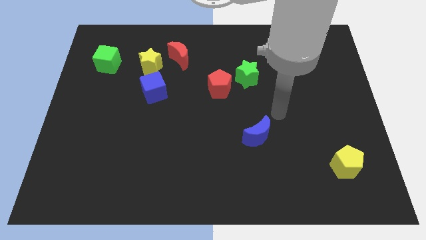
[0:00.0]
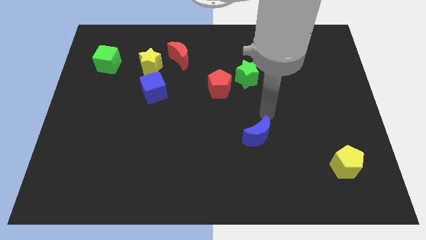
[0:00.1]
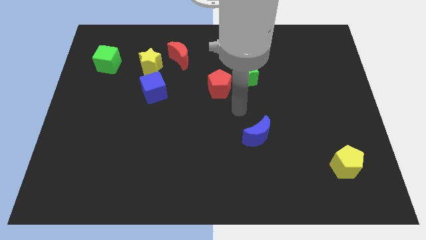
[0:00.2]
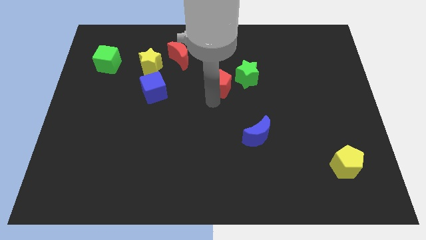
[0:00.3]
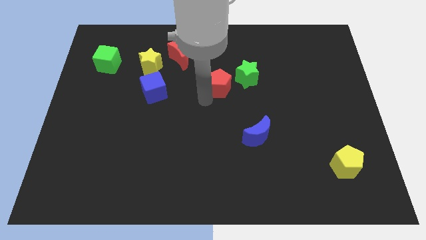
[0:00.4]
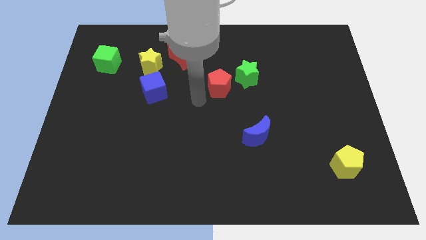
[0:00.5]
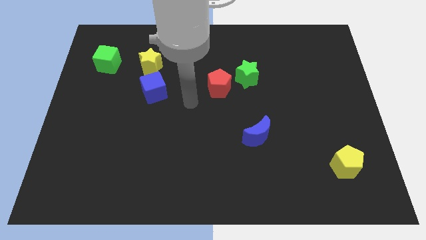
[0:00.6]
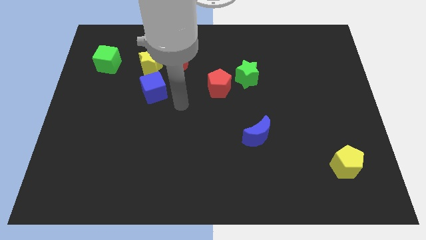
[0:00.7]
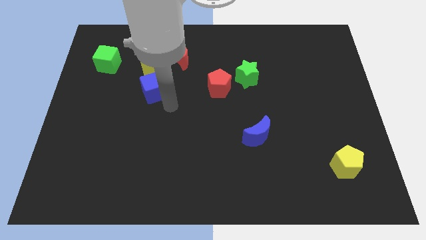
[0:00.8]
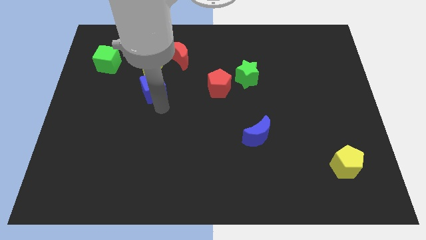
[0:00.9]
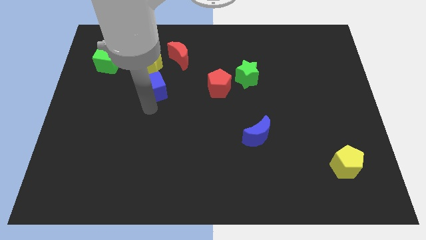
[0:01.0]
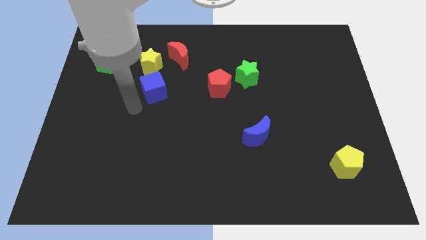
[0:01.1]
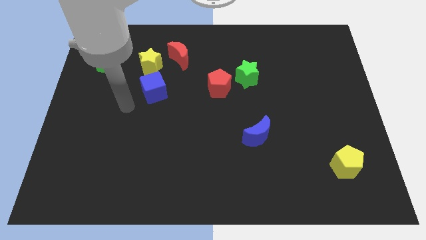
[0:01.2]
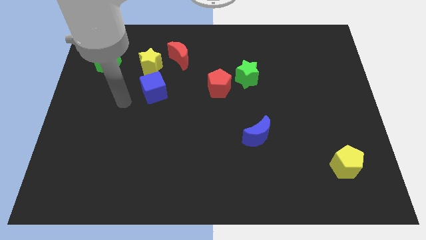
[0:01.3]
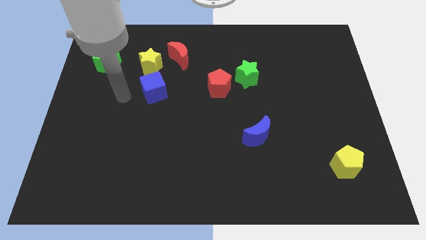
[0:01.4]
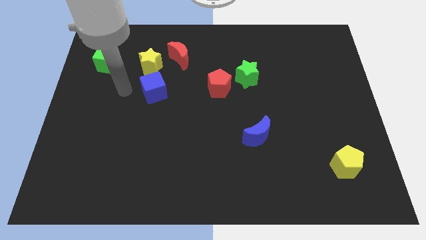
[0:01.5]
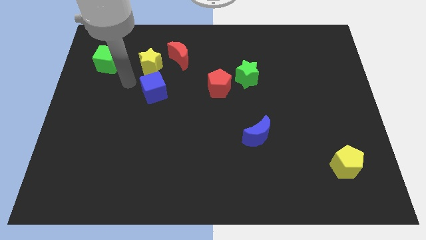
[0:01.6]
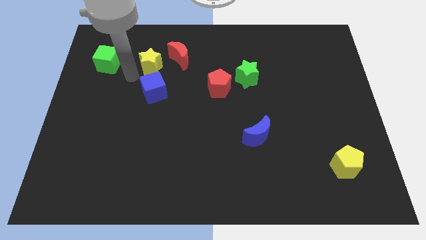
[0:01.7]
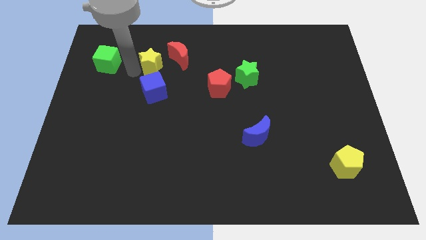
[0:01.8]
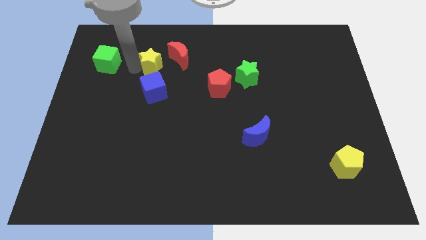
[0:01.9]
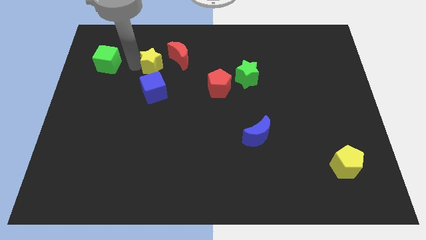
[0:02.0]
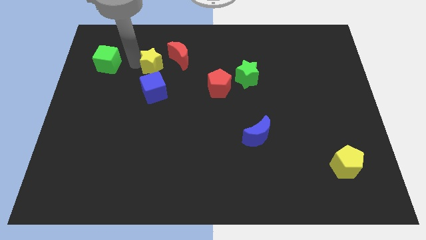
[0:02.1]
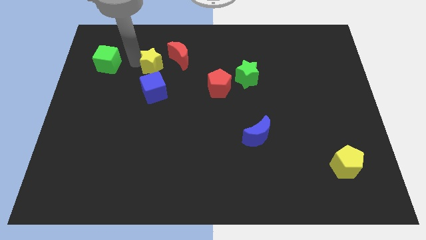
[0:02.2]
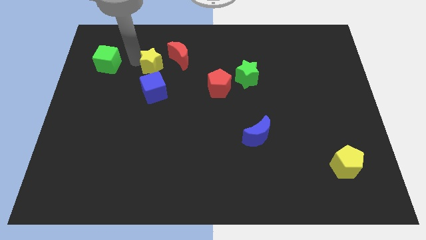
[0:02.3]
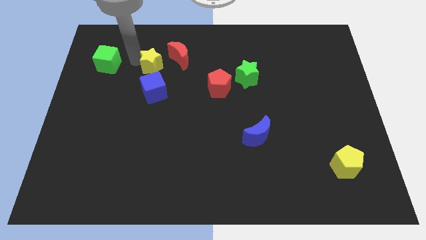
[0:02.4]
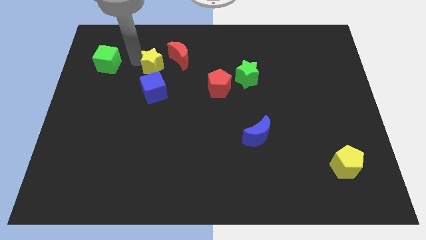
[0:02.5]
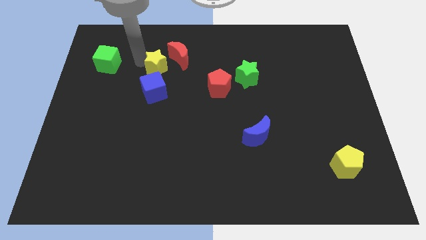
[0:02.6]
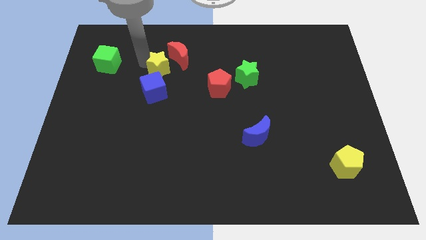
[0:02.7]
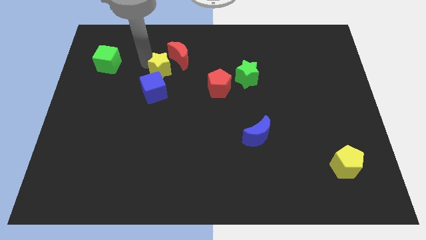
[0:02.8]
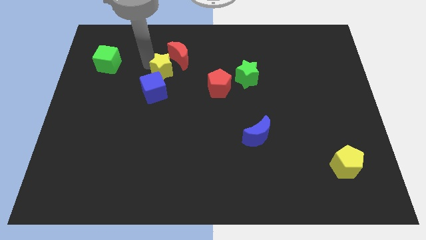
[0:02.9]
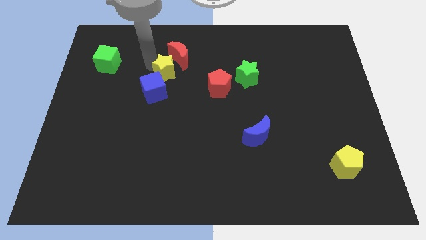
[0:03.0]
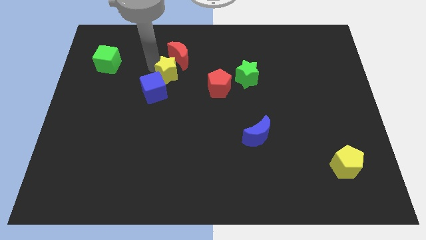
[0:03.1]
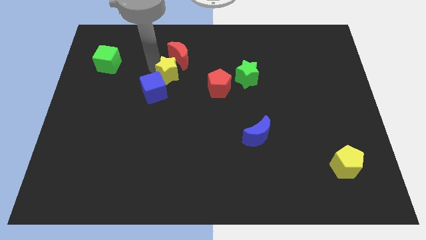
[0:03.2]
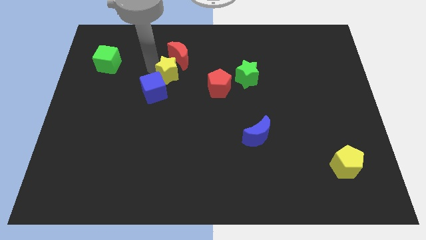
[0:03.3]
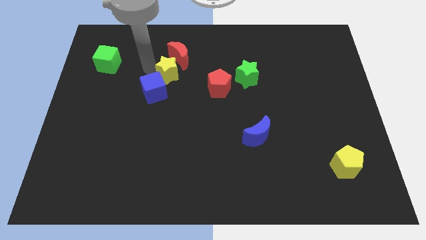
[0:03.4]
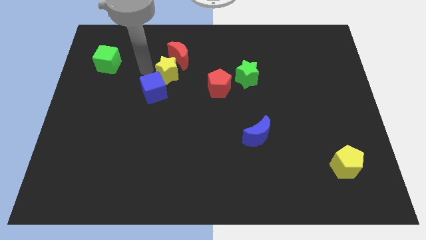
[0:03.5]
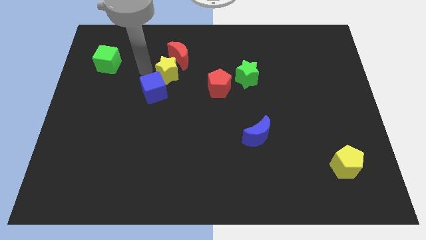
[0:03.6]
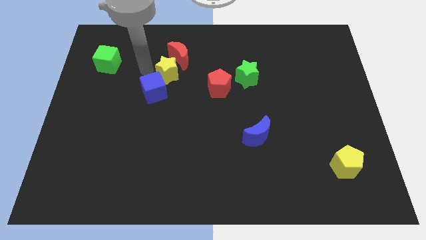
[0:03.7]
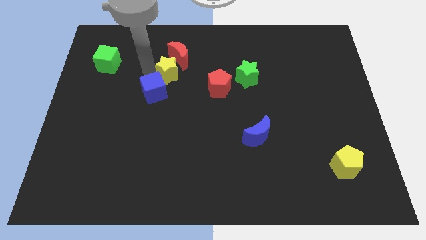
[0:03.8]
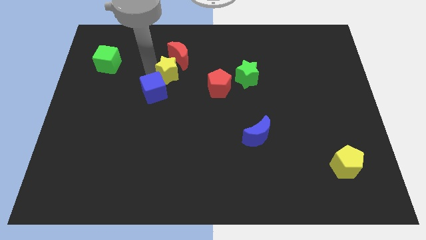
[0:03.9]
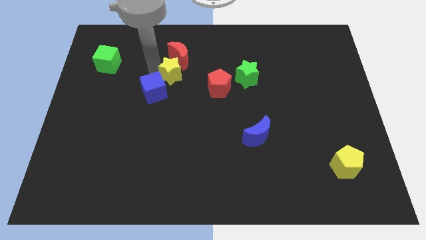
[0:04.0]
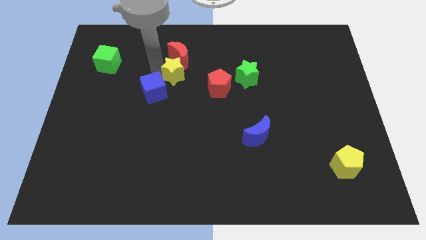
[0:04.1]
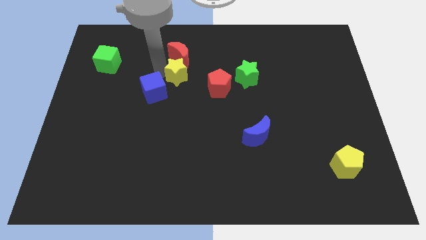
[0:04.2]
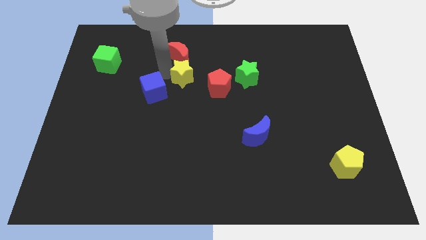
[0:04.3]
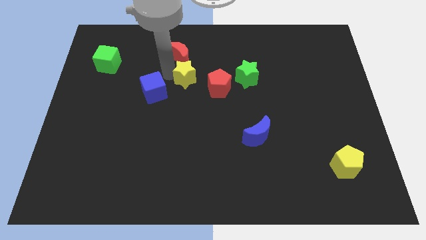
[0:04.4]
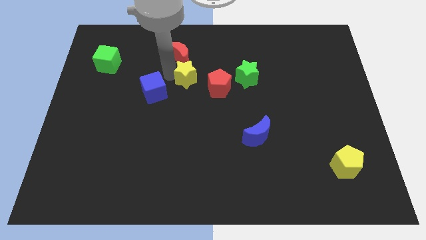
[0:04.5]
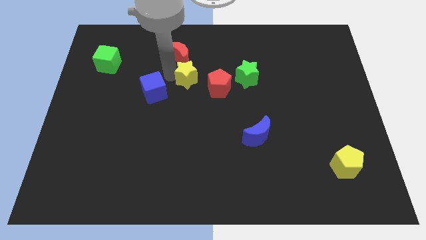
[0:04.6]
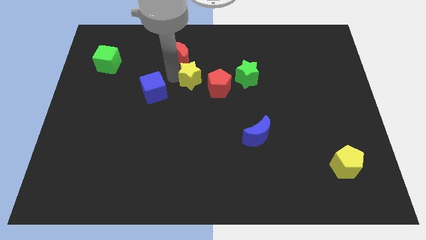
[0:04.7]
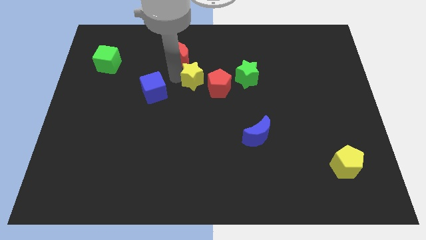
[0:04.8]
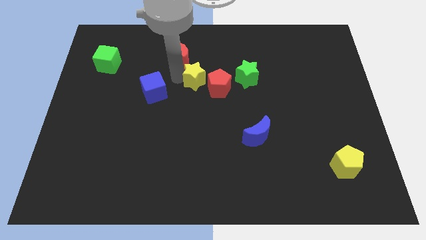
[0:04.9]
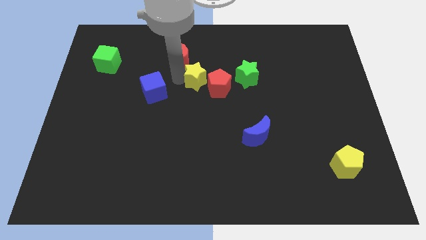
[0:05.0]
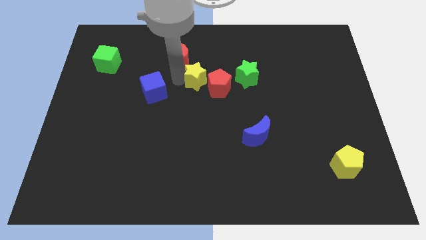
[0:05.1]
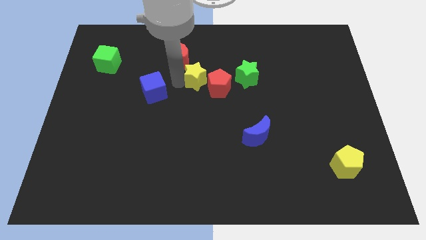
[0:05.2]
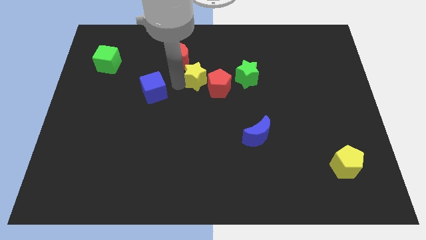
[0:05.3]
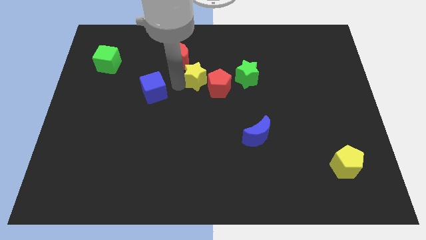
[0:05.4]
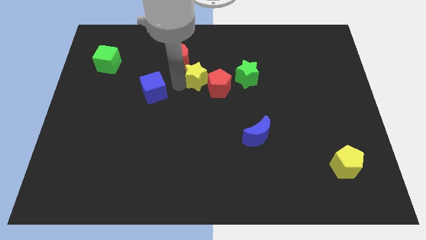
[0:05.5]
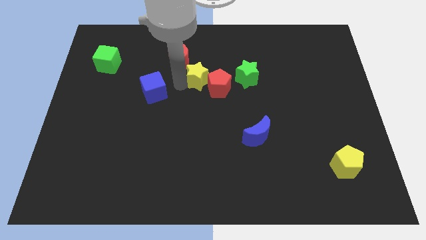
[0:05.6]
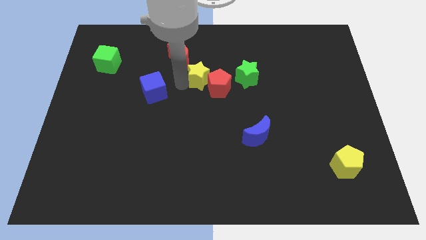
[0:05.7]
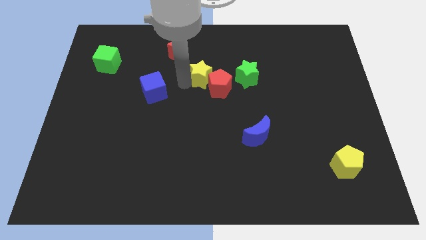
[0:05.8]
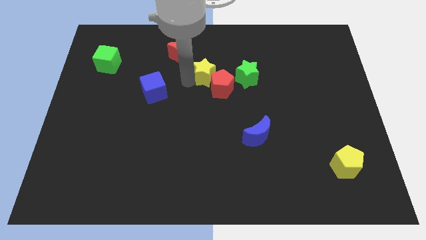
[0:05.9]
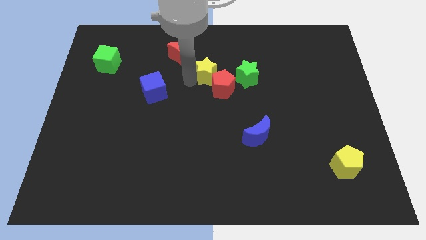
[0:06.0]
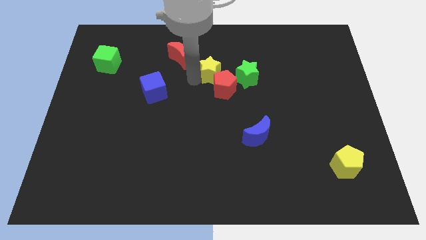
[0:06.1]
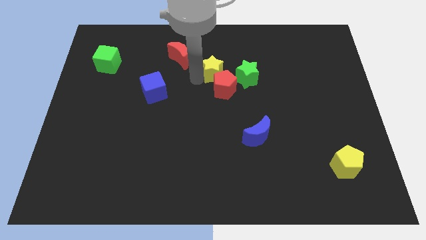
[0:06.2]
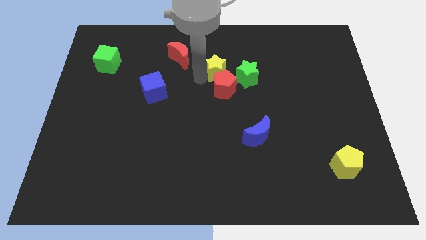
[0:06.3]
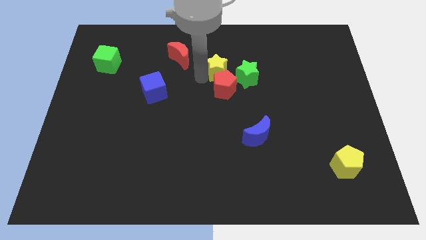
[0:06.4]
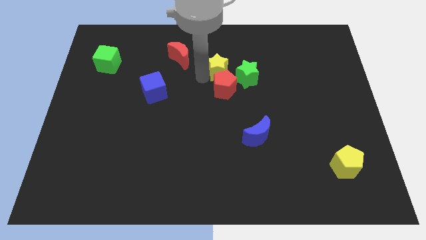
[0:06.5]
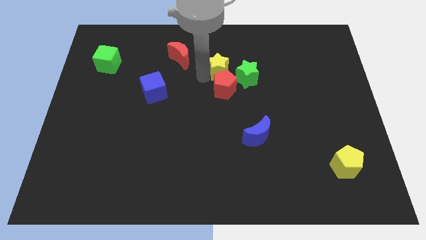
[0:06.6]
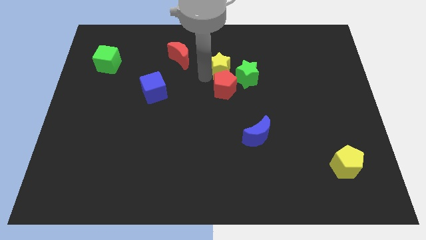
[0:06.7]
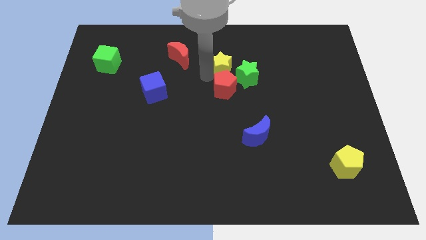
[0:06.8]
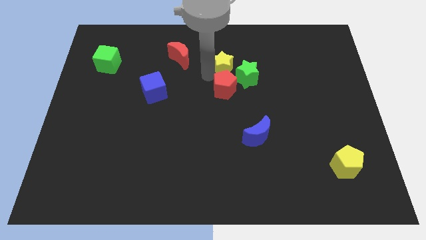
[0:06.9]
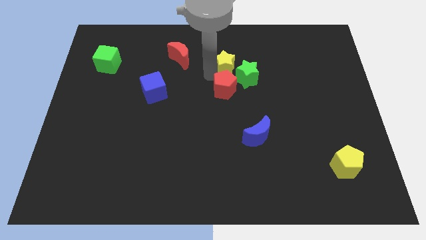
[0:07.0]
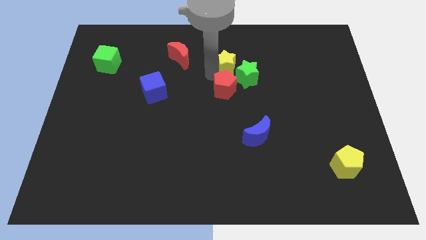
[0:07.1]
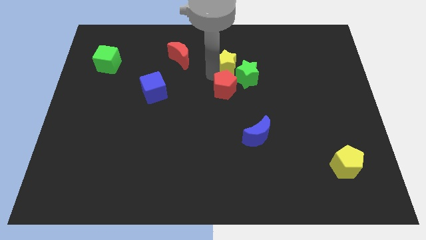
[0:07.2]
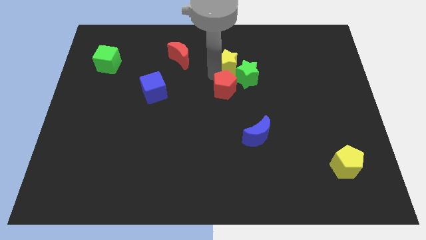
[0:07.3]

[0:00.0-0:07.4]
push the yellow star to the green star

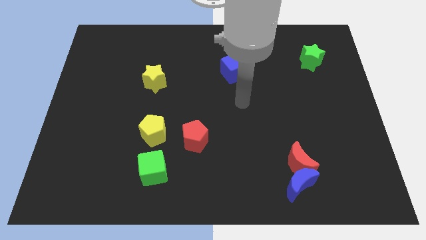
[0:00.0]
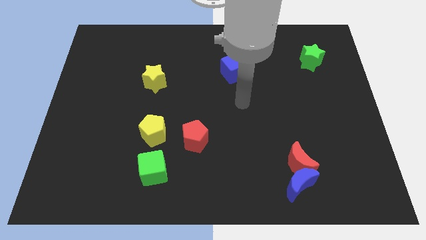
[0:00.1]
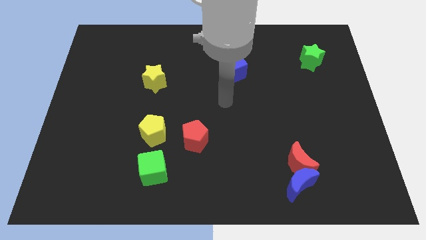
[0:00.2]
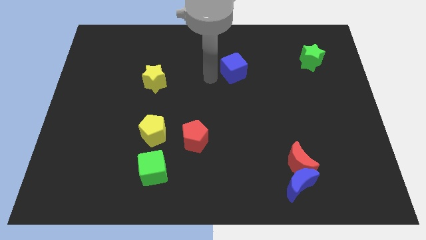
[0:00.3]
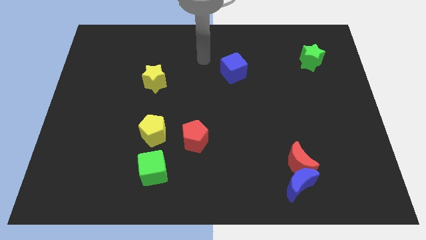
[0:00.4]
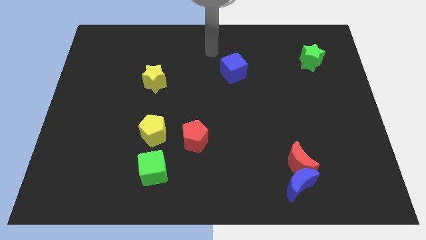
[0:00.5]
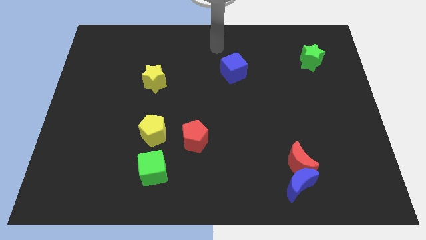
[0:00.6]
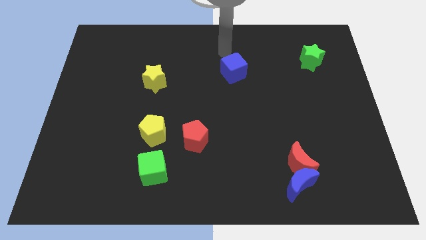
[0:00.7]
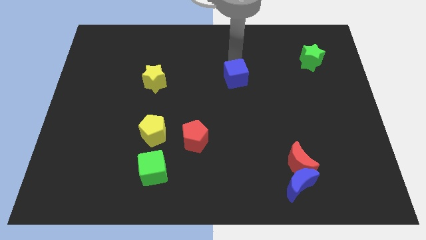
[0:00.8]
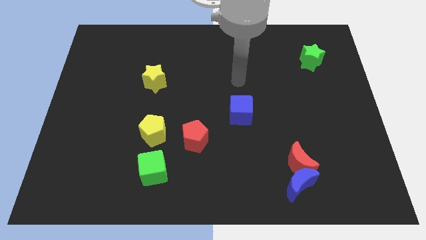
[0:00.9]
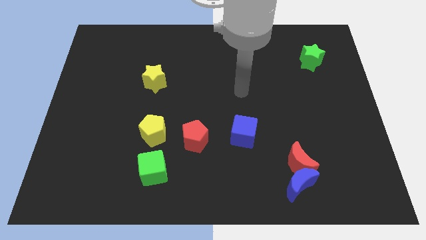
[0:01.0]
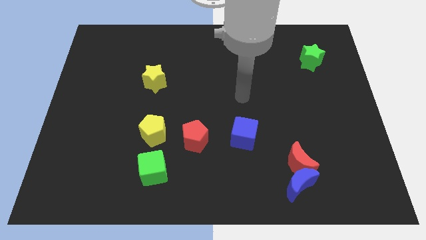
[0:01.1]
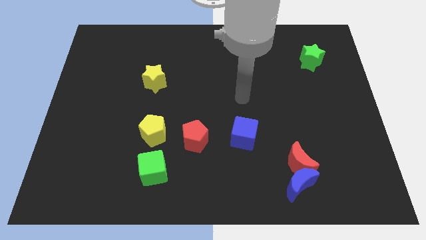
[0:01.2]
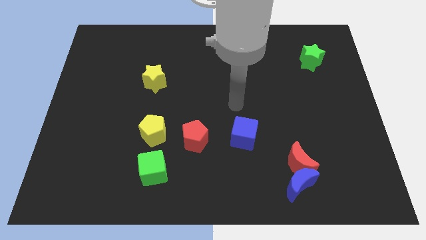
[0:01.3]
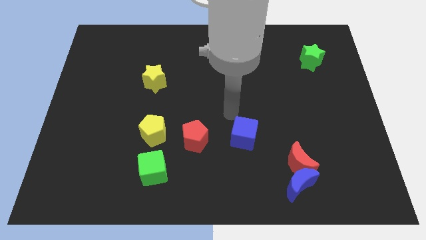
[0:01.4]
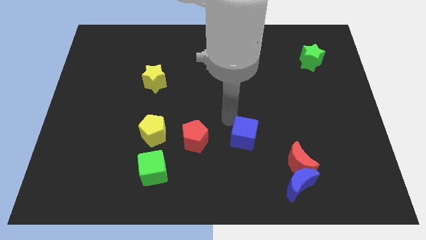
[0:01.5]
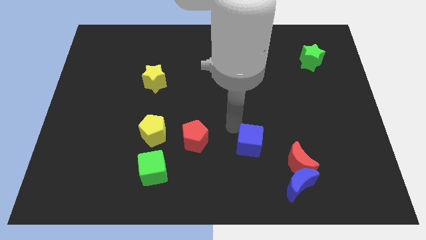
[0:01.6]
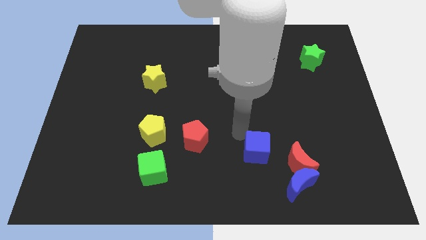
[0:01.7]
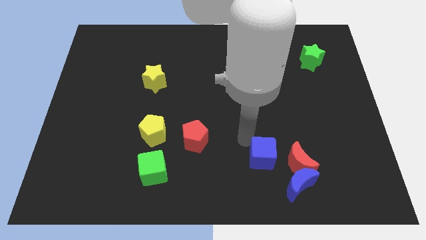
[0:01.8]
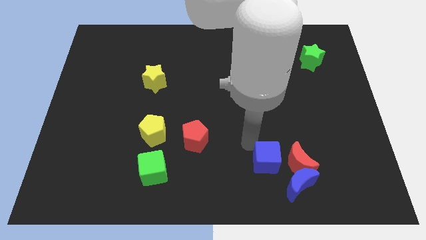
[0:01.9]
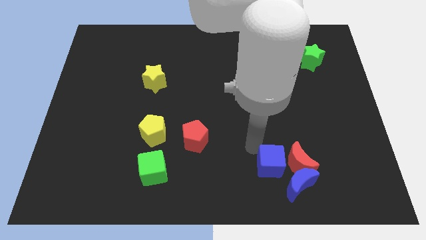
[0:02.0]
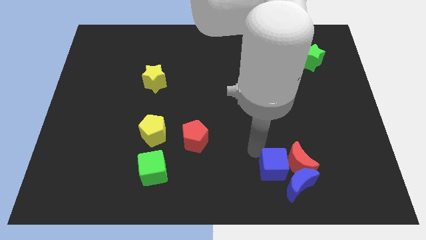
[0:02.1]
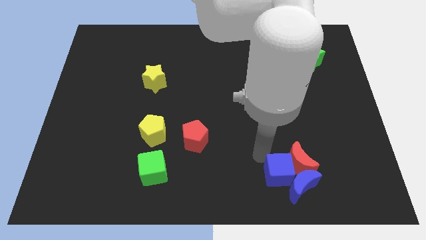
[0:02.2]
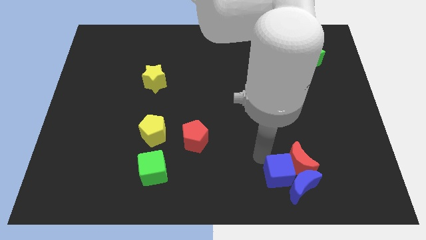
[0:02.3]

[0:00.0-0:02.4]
slide the blue cube to the blue moon
